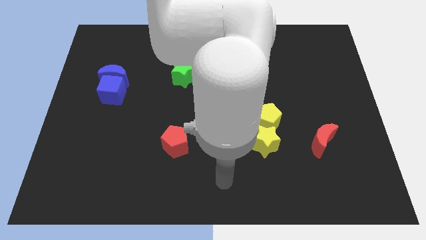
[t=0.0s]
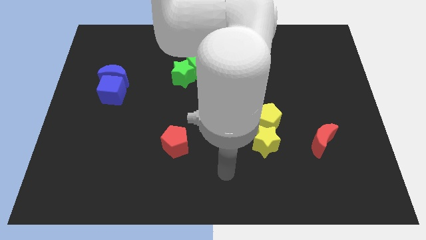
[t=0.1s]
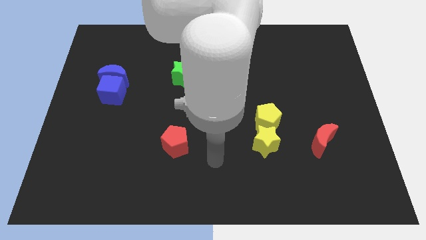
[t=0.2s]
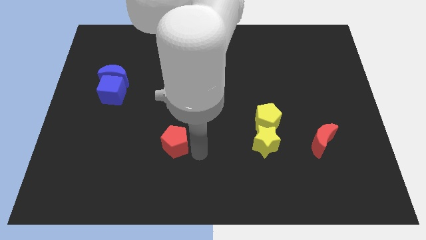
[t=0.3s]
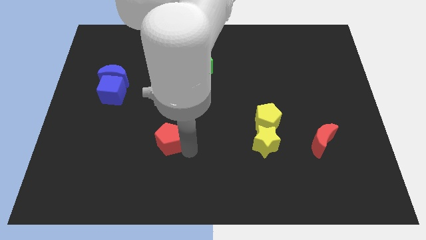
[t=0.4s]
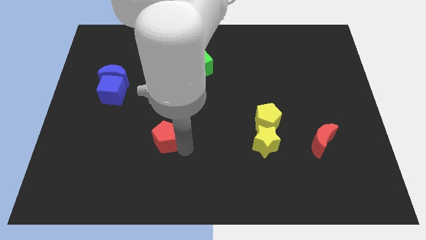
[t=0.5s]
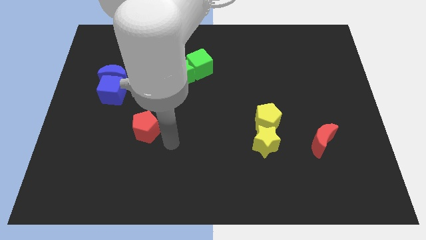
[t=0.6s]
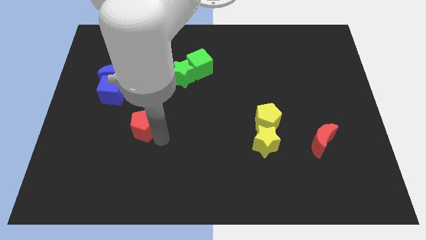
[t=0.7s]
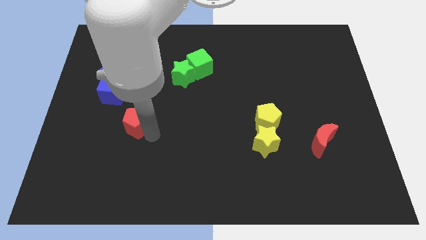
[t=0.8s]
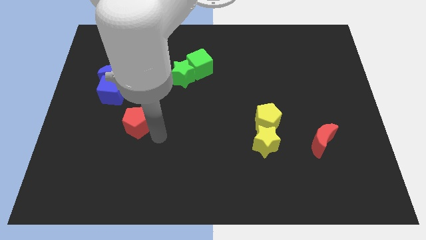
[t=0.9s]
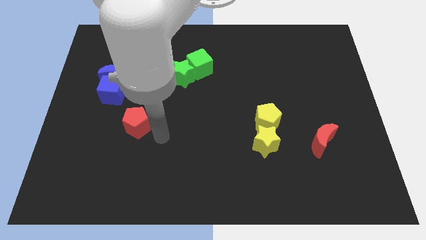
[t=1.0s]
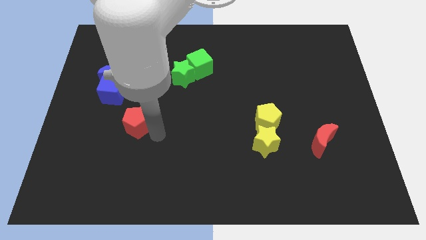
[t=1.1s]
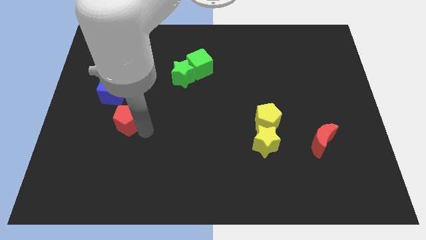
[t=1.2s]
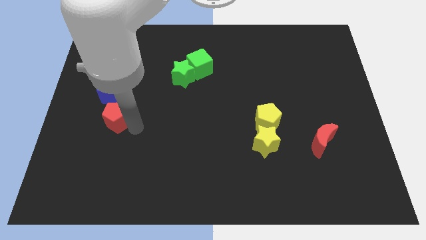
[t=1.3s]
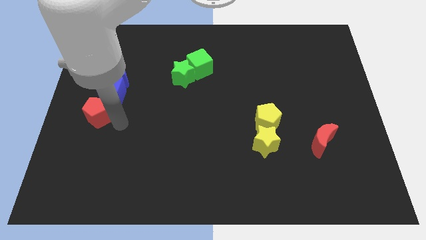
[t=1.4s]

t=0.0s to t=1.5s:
put the red pentagon below the blue cube

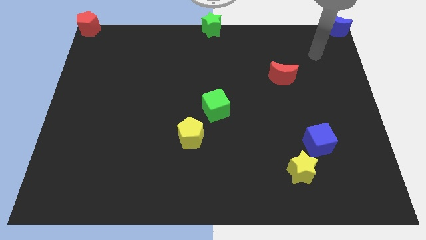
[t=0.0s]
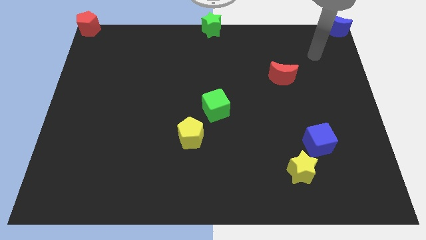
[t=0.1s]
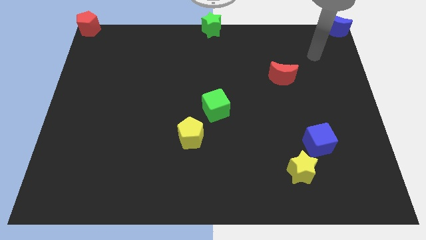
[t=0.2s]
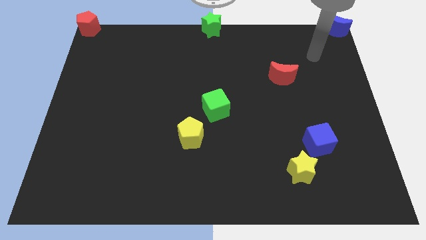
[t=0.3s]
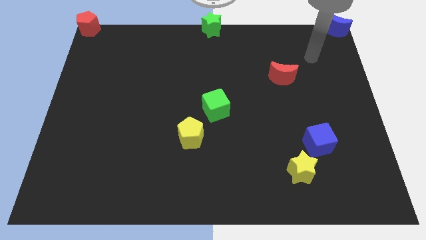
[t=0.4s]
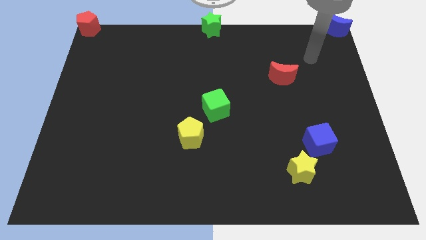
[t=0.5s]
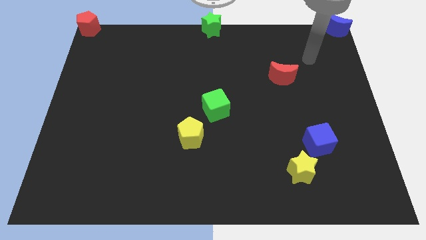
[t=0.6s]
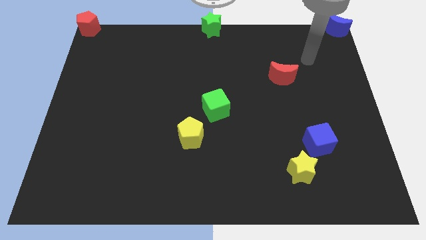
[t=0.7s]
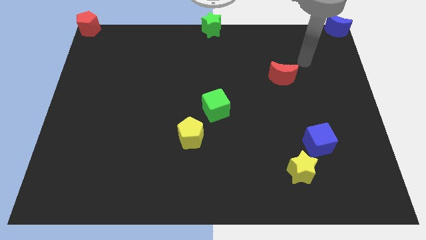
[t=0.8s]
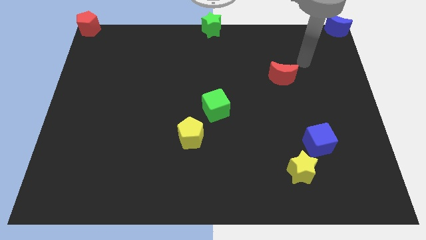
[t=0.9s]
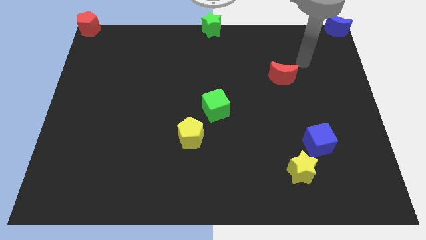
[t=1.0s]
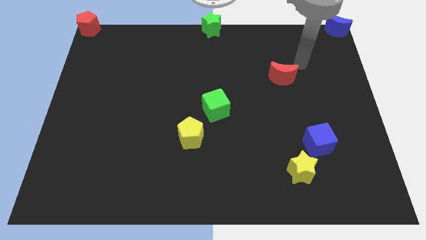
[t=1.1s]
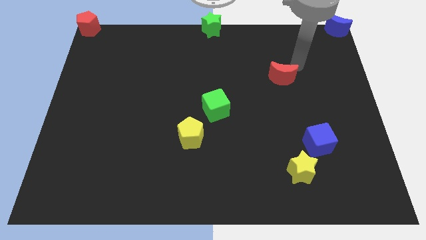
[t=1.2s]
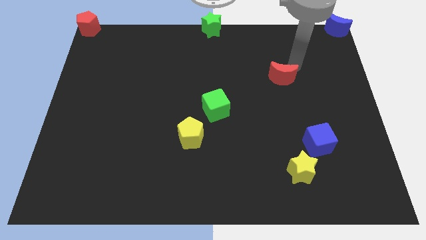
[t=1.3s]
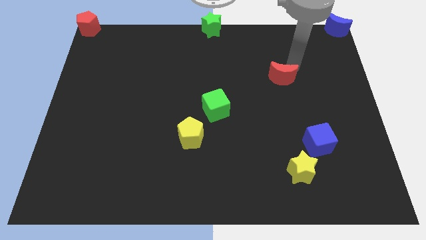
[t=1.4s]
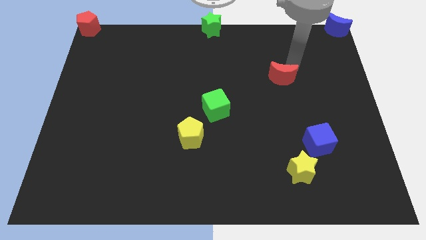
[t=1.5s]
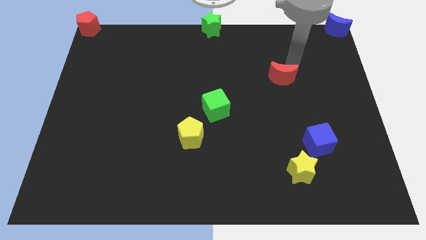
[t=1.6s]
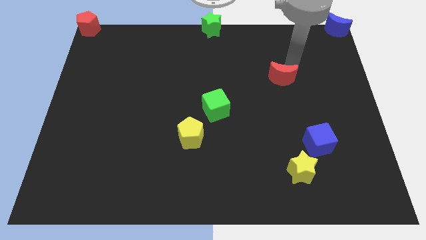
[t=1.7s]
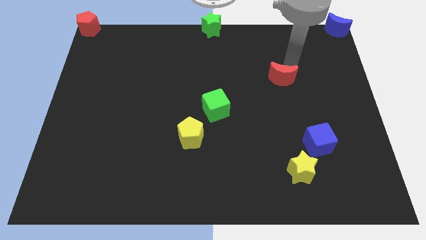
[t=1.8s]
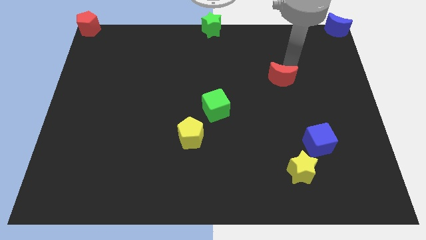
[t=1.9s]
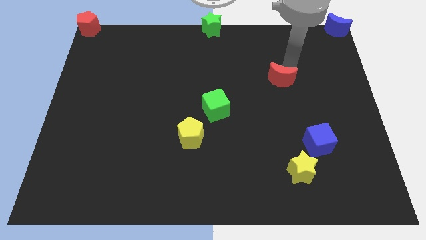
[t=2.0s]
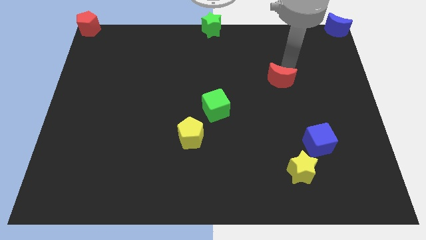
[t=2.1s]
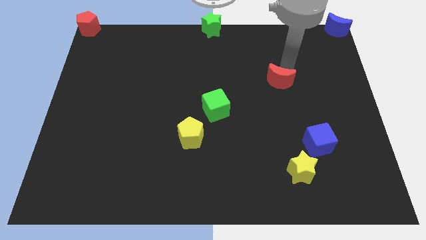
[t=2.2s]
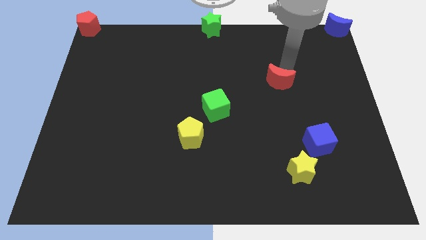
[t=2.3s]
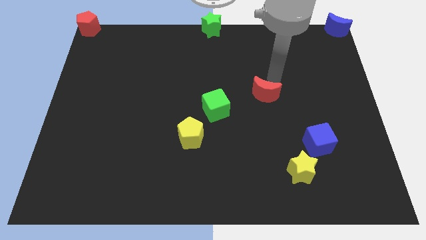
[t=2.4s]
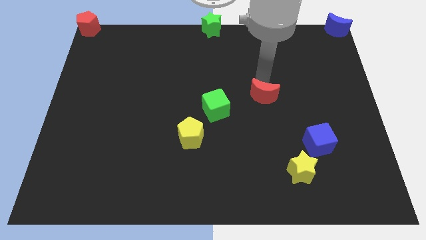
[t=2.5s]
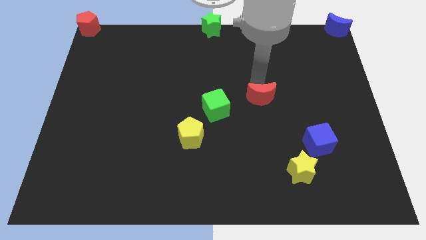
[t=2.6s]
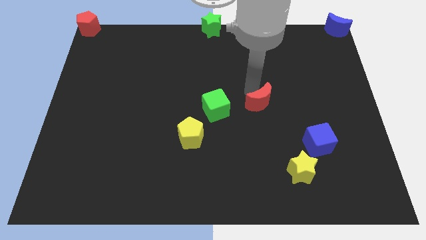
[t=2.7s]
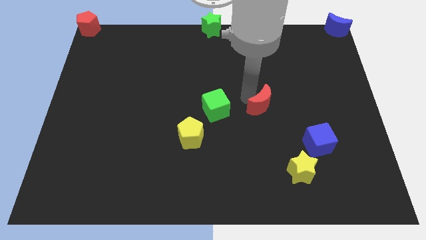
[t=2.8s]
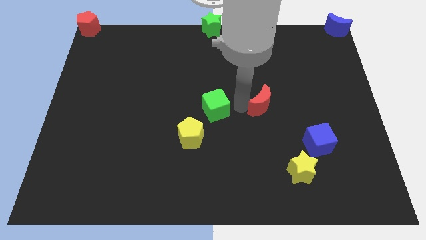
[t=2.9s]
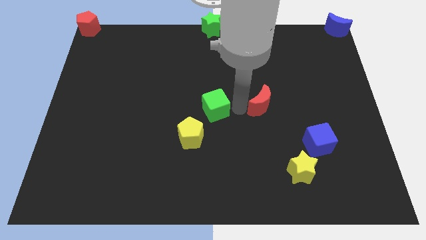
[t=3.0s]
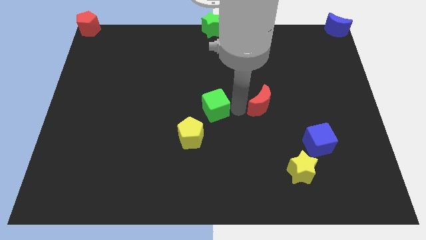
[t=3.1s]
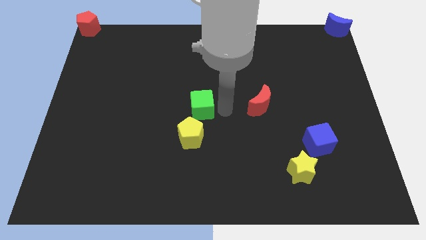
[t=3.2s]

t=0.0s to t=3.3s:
slightly move the red crescent towards green cube

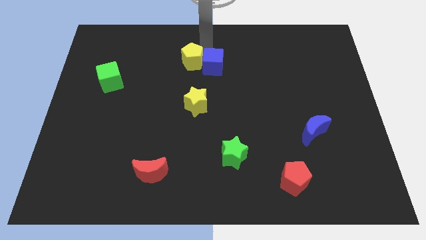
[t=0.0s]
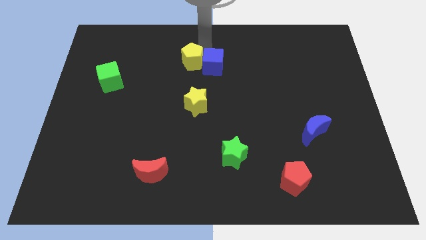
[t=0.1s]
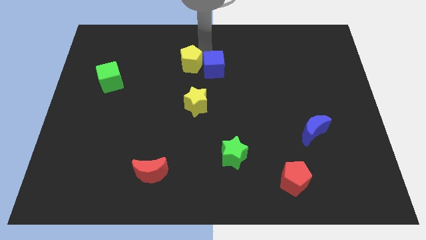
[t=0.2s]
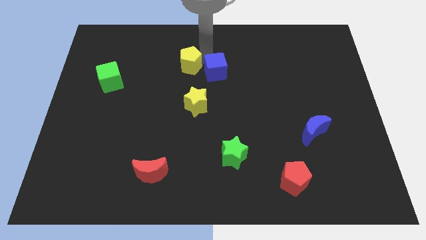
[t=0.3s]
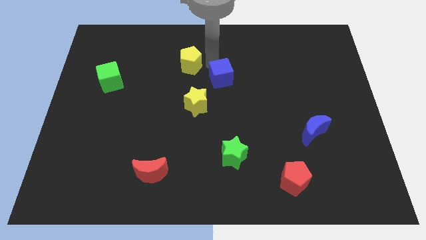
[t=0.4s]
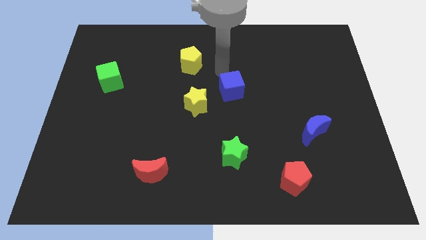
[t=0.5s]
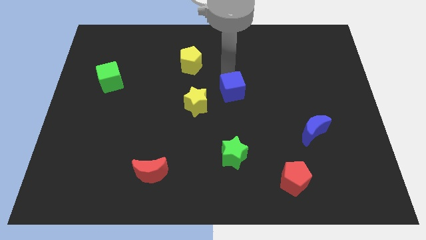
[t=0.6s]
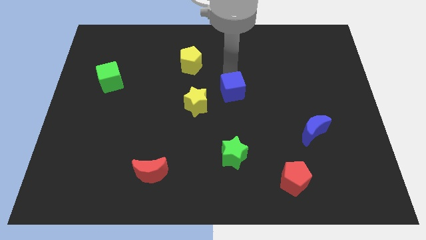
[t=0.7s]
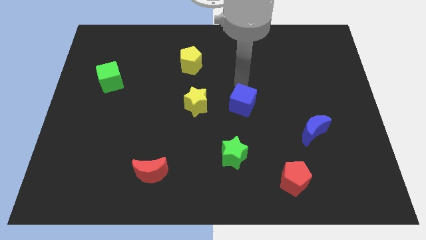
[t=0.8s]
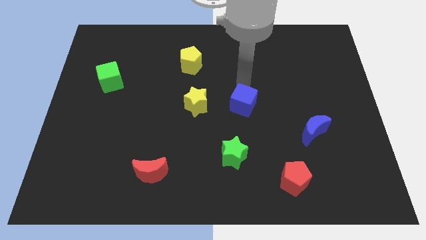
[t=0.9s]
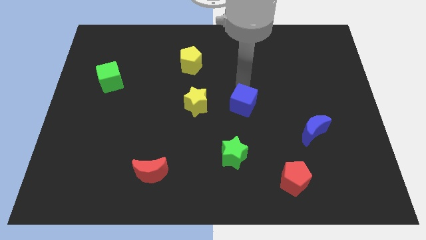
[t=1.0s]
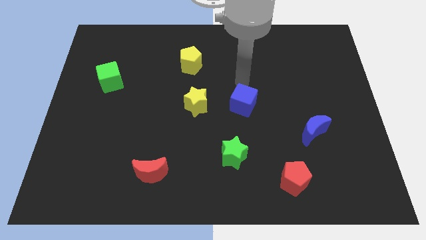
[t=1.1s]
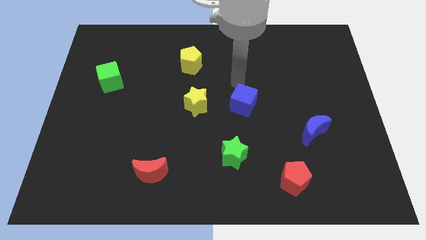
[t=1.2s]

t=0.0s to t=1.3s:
separate the blue cube from the yellow pentagon

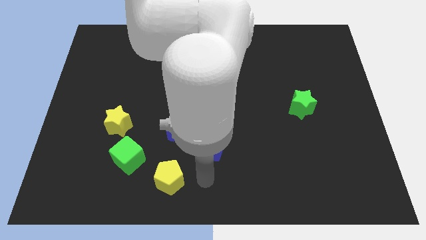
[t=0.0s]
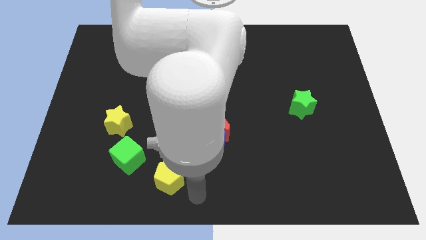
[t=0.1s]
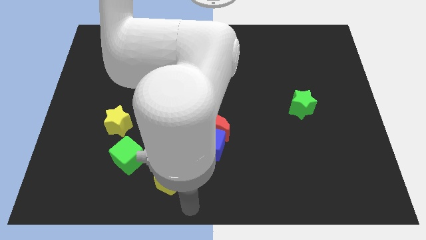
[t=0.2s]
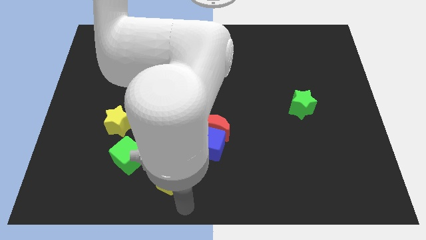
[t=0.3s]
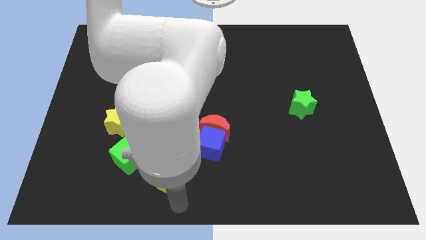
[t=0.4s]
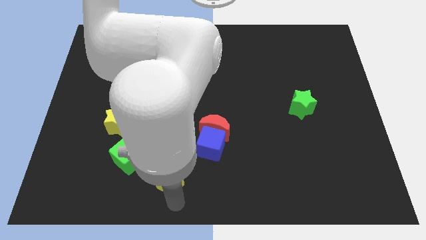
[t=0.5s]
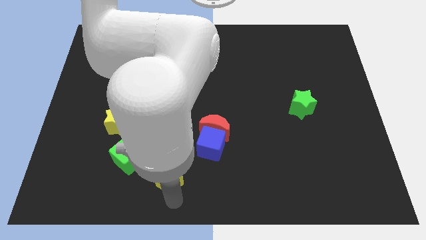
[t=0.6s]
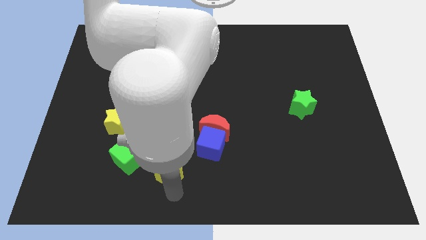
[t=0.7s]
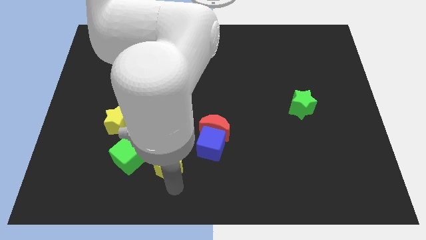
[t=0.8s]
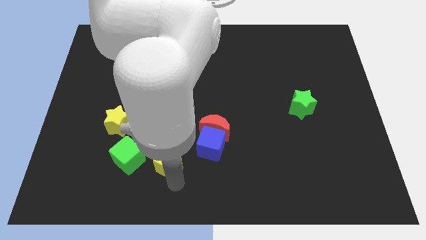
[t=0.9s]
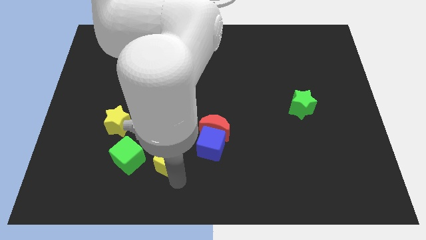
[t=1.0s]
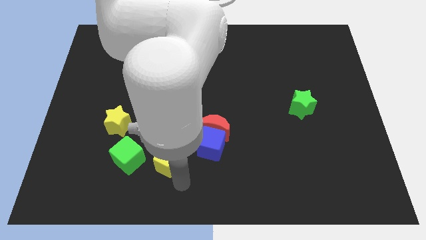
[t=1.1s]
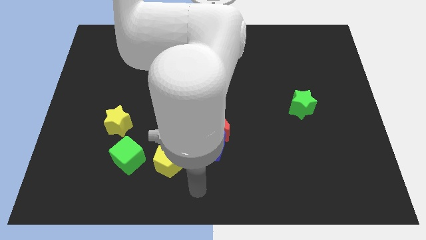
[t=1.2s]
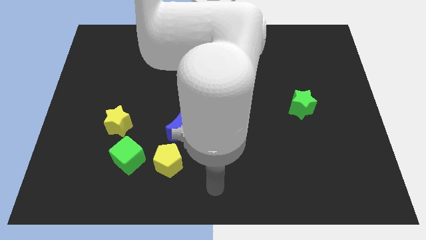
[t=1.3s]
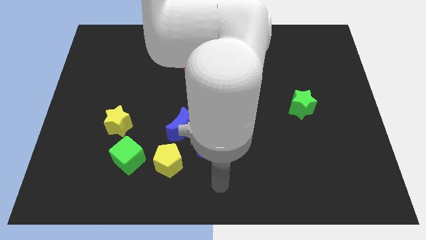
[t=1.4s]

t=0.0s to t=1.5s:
move the yellow pentagon slightly upwards

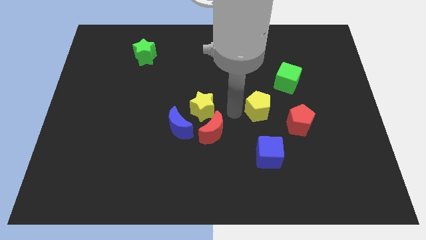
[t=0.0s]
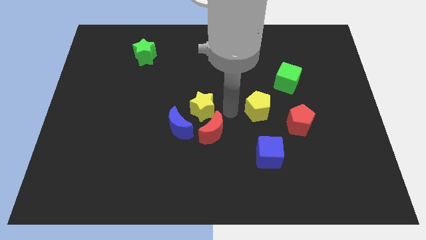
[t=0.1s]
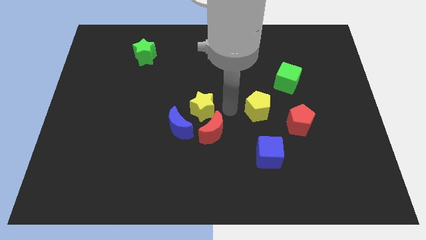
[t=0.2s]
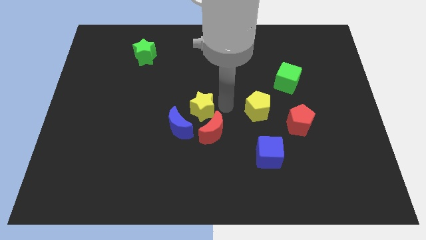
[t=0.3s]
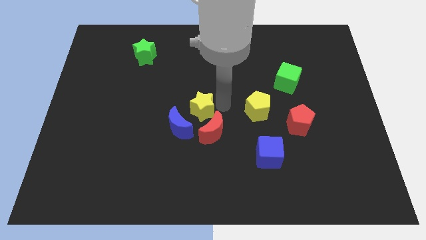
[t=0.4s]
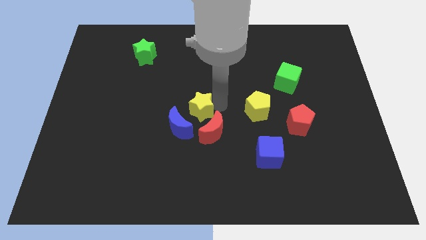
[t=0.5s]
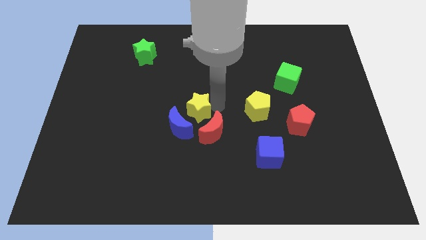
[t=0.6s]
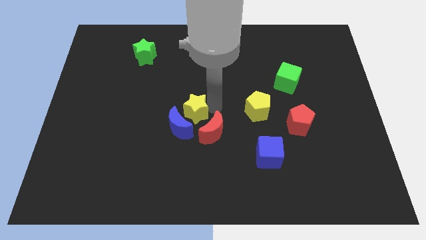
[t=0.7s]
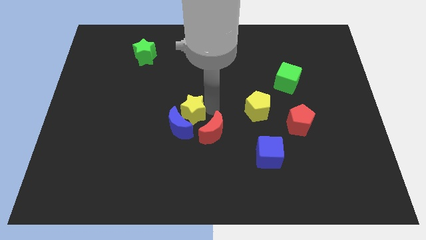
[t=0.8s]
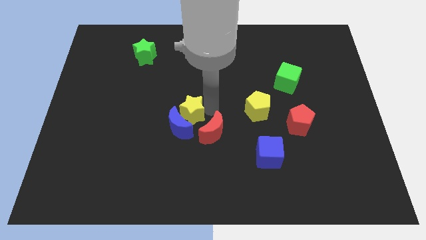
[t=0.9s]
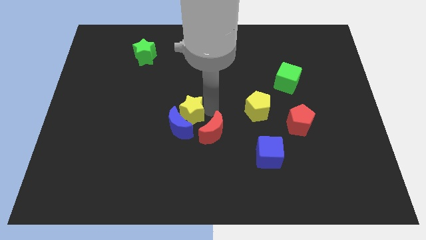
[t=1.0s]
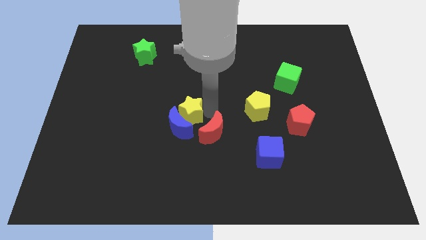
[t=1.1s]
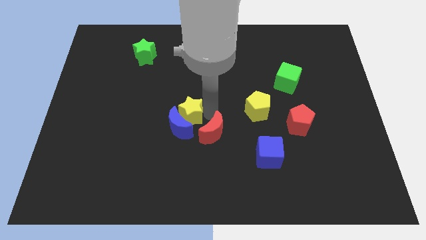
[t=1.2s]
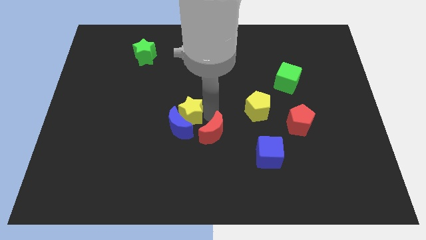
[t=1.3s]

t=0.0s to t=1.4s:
push yellow star into blue moon
